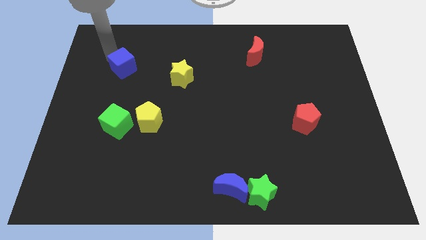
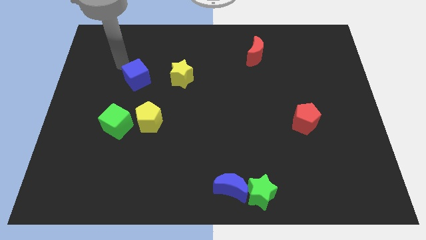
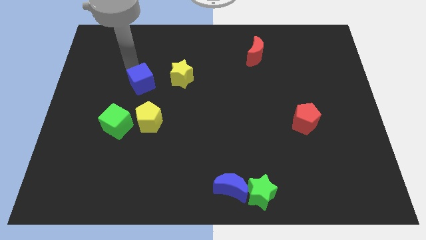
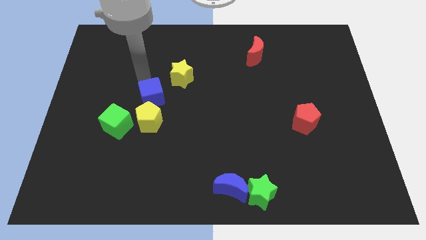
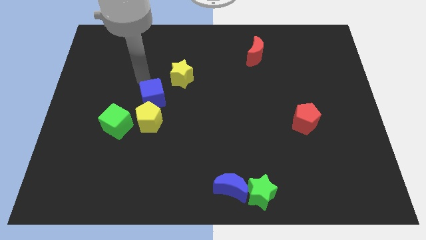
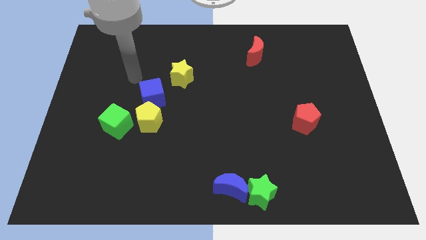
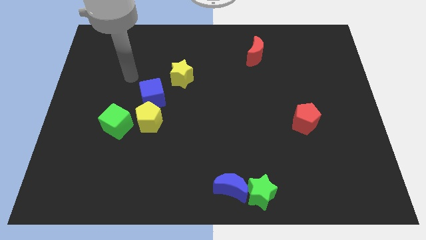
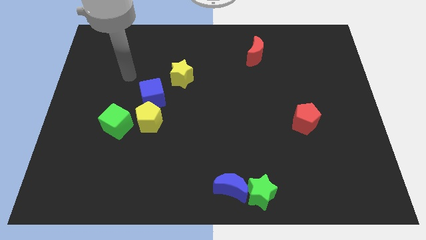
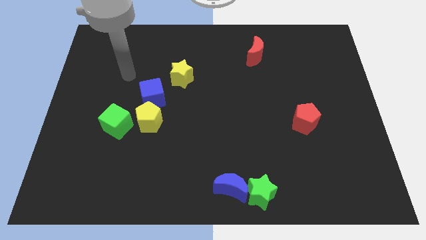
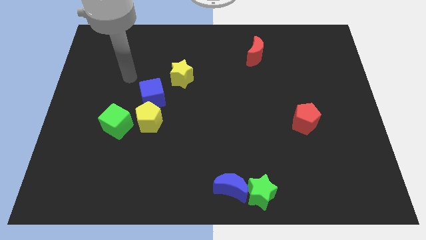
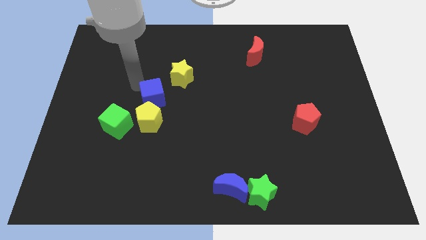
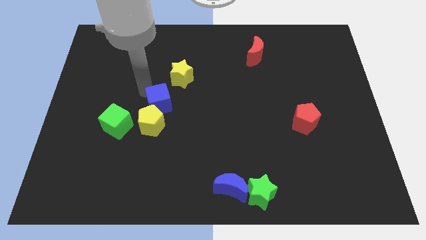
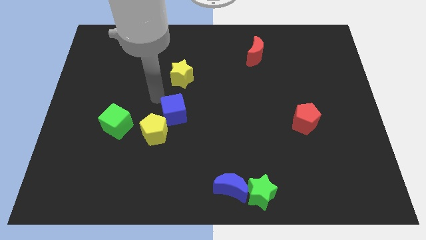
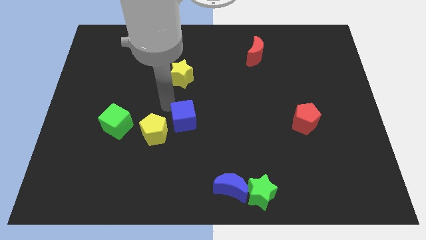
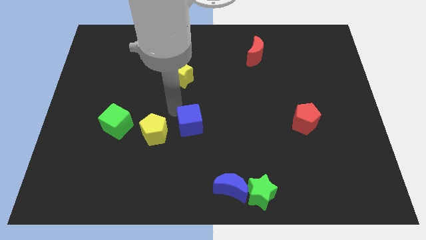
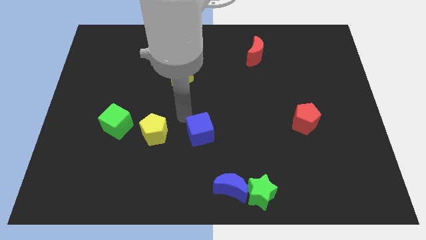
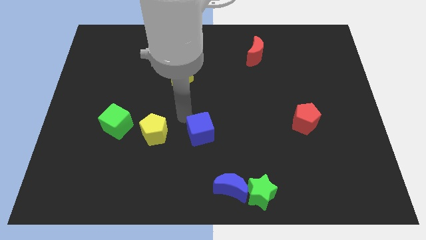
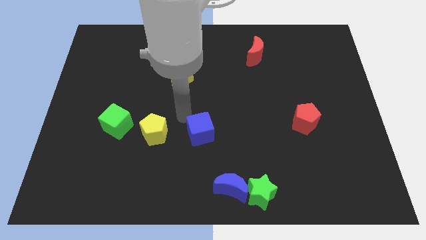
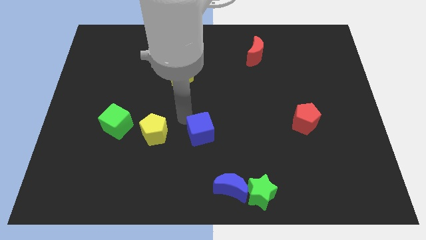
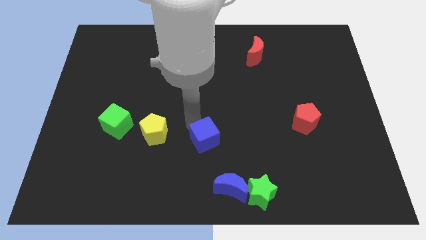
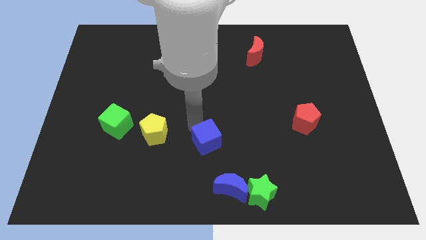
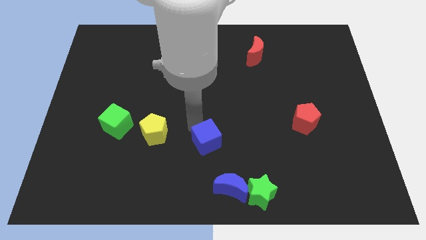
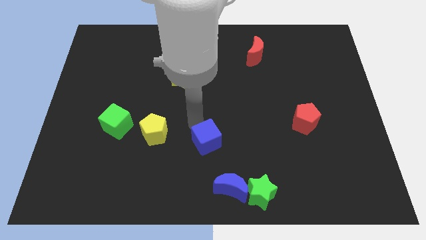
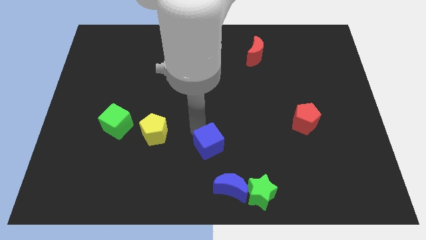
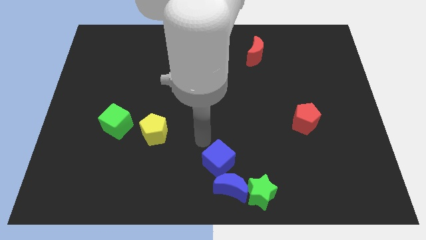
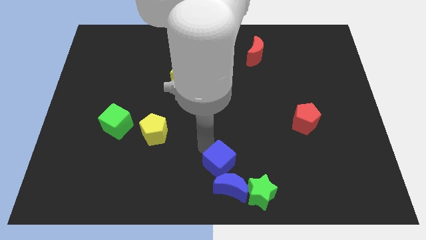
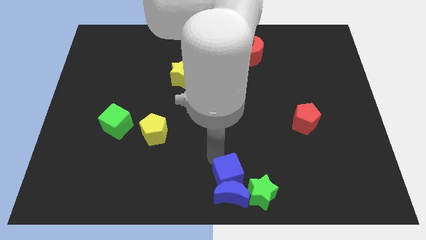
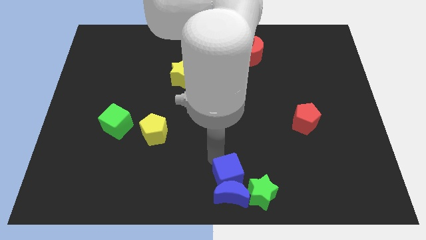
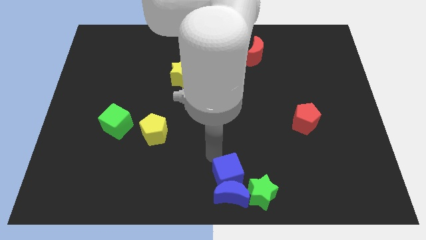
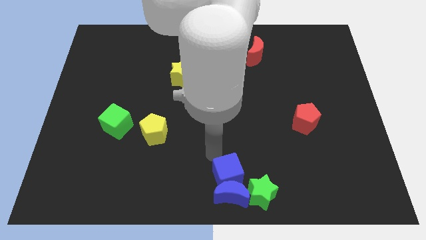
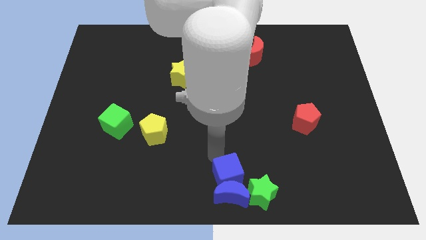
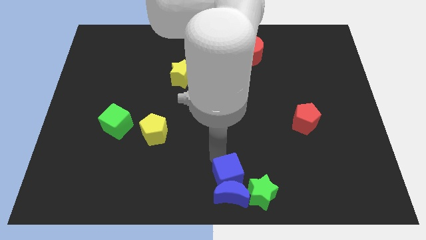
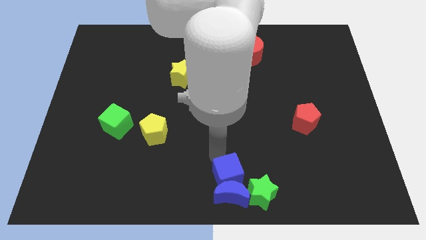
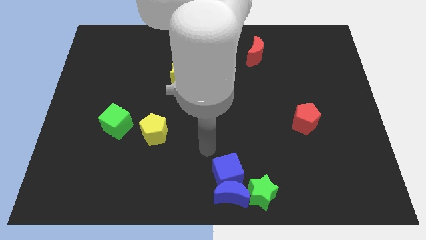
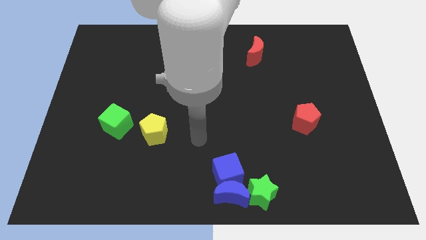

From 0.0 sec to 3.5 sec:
push the blue cube into the blue crescent

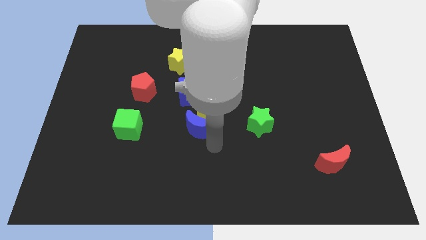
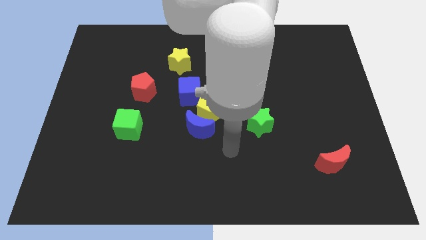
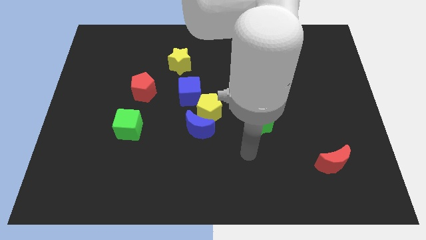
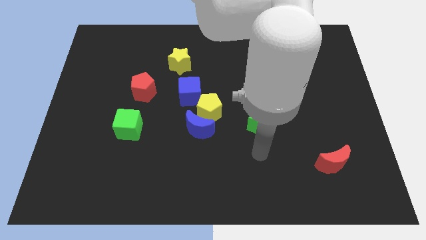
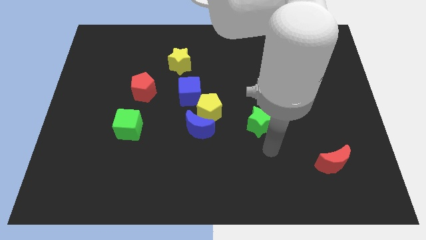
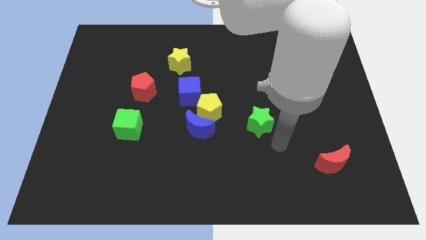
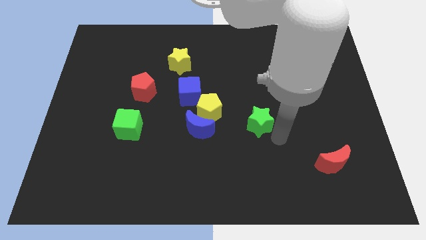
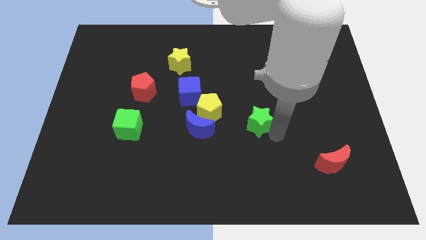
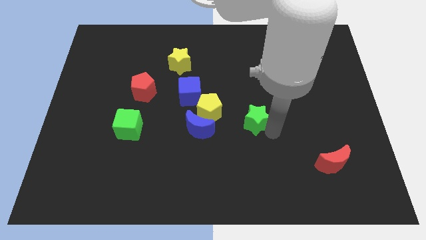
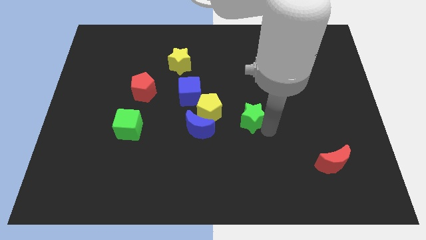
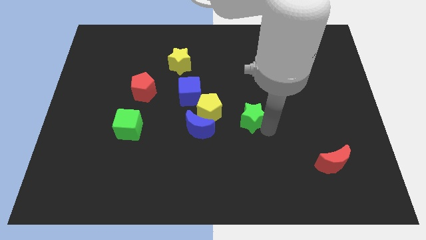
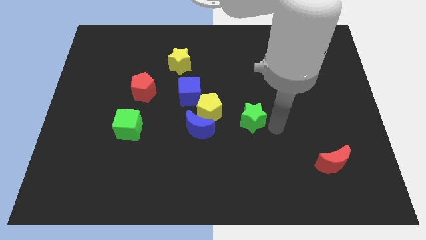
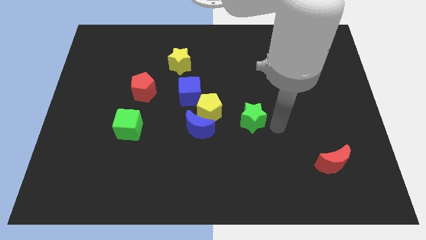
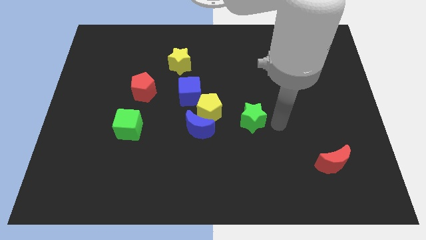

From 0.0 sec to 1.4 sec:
push the green star close to the yellow pentagon

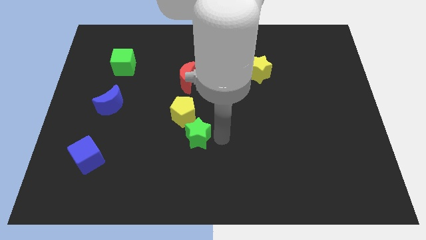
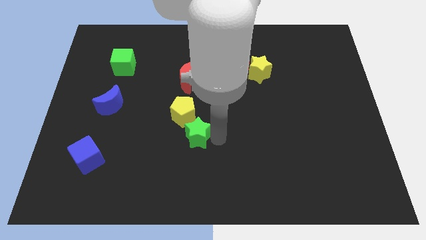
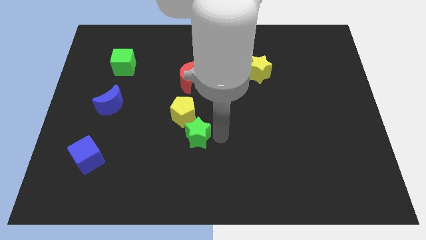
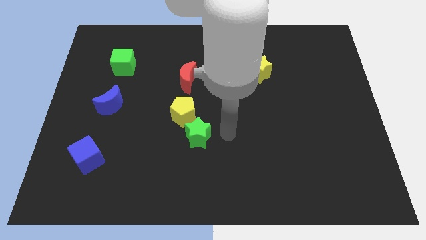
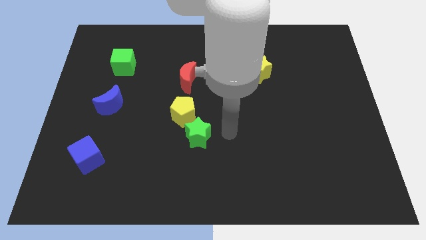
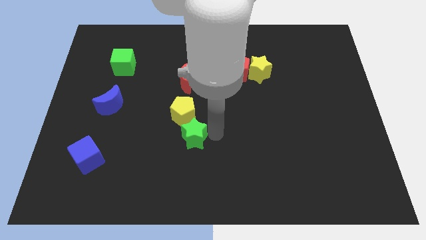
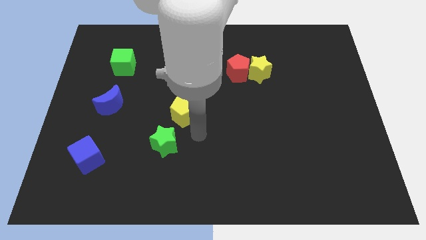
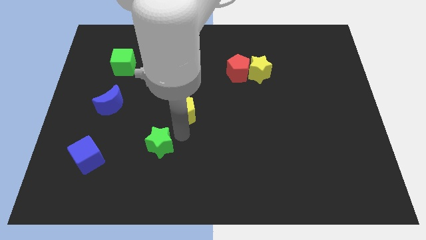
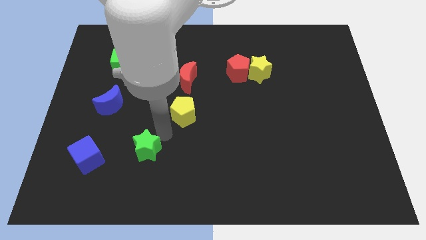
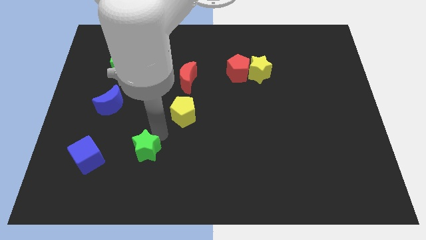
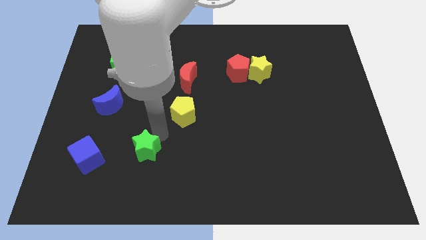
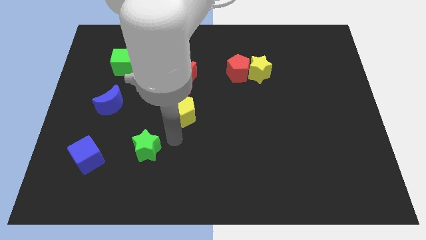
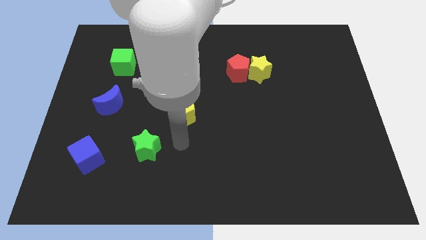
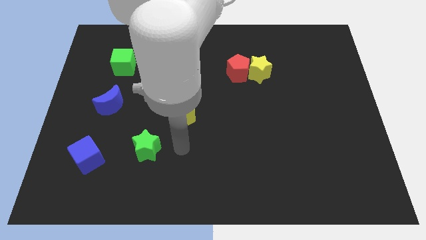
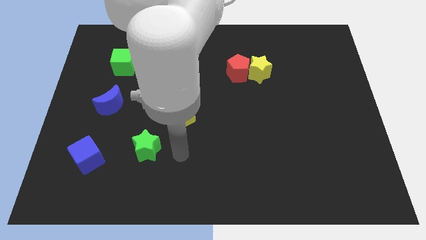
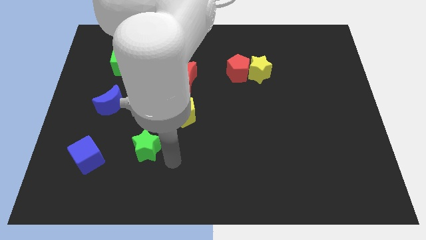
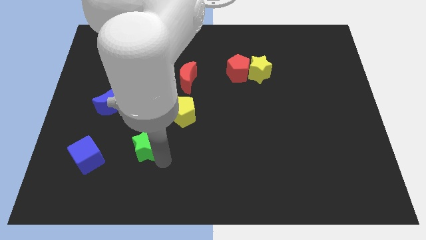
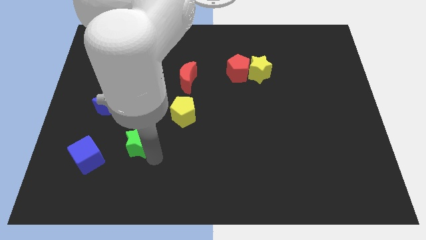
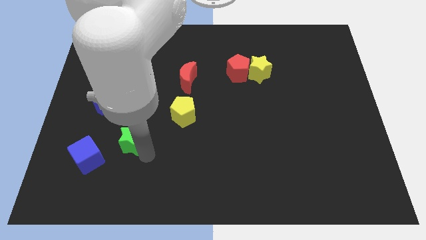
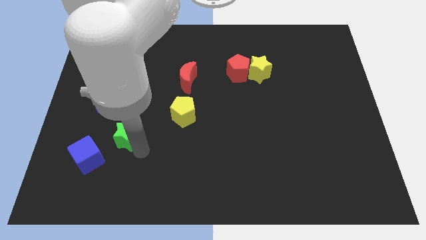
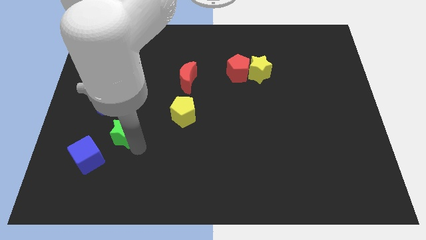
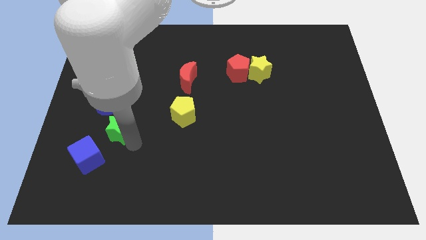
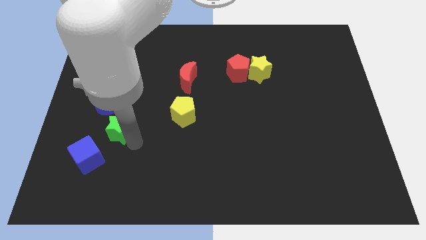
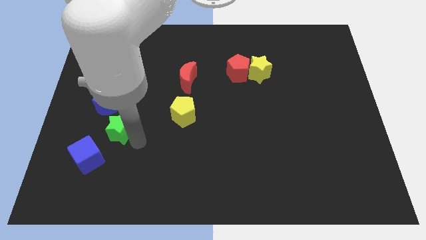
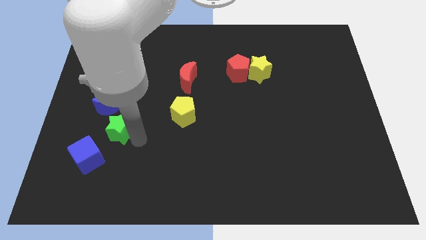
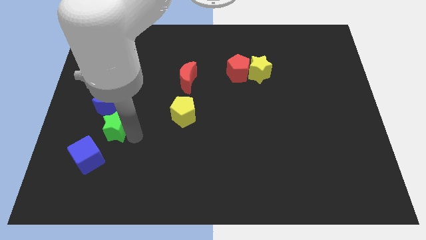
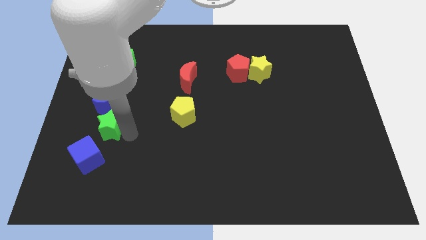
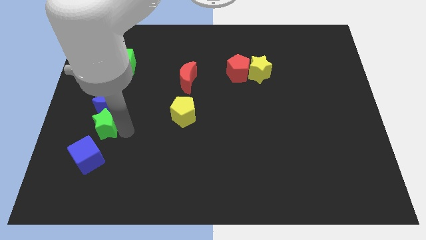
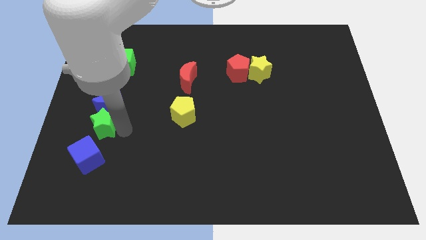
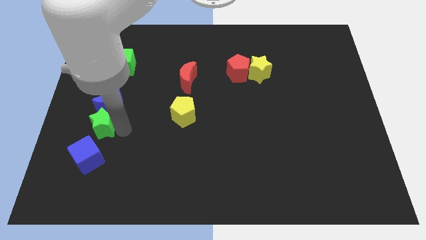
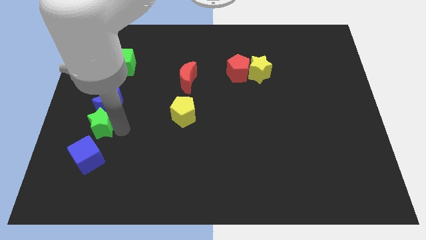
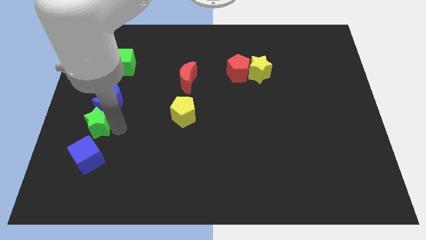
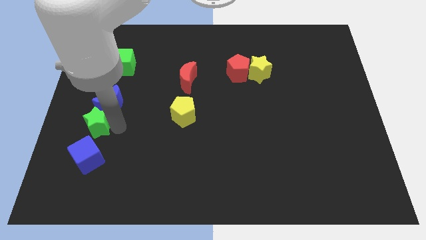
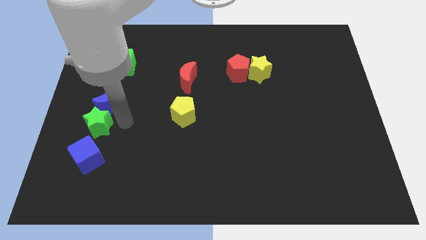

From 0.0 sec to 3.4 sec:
place the green star between blue cube and crescent

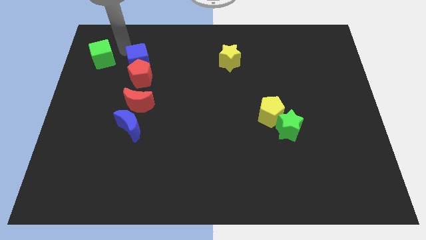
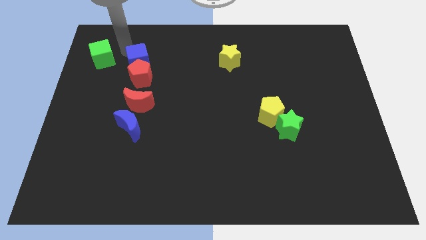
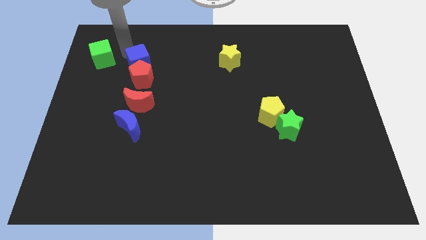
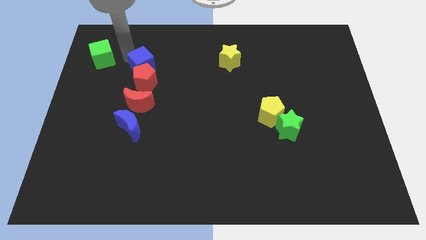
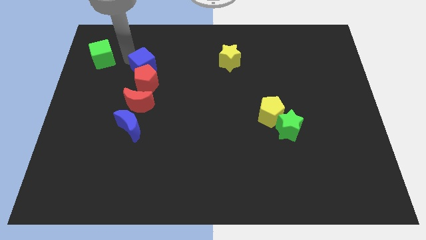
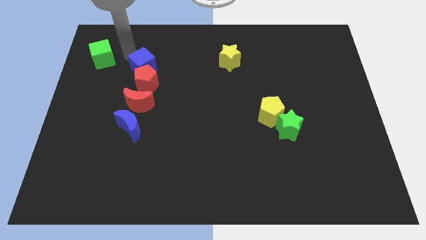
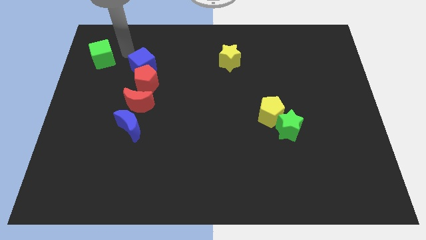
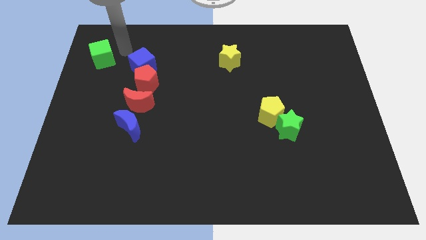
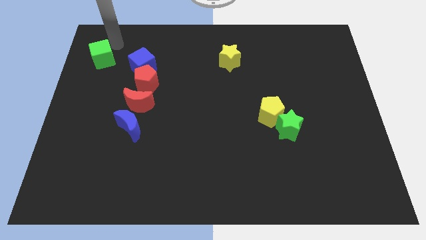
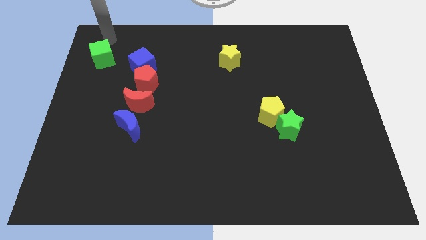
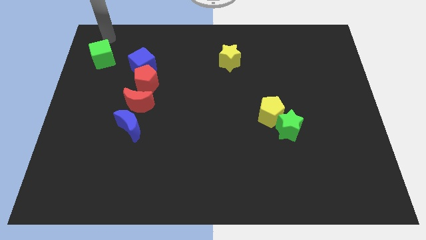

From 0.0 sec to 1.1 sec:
move the arm towards the green cube
